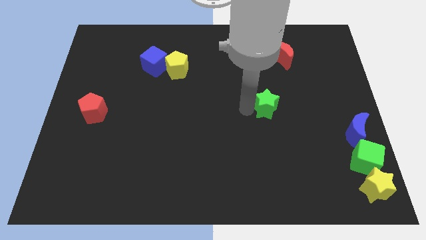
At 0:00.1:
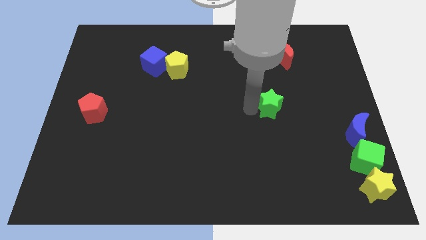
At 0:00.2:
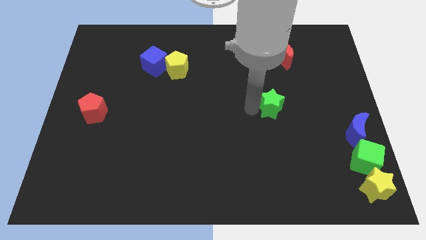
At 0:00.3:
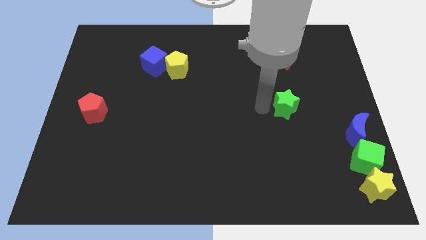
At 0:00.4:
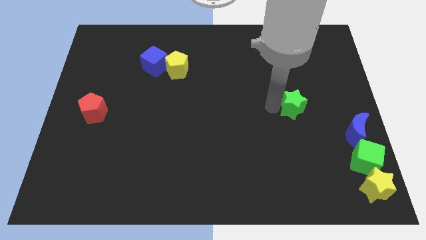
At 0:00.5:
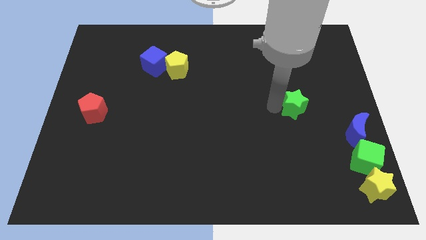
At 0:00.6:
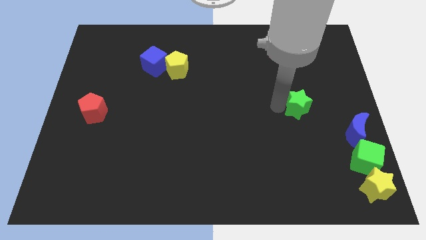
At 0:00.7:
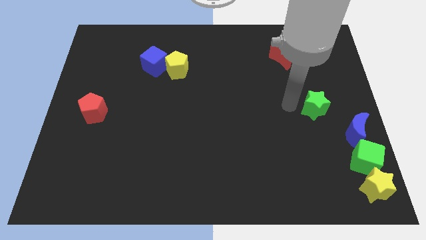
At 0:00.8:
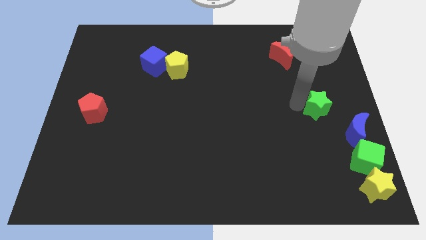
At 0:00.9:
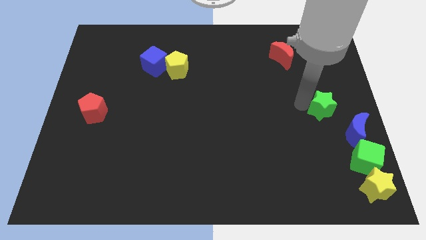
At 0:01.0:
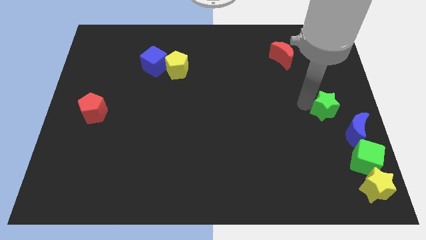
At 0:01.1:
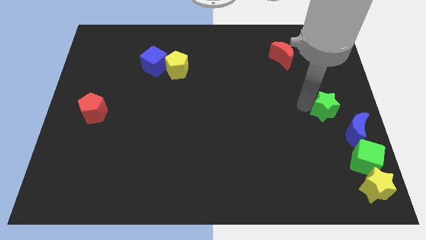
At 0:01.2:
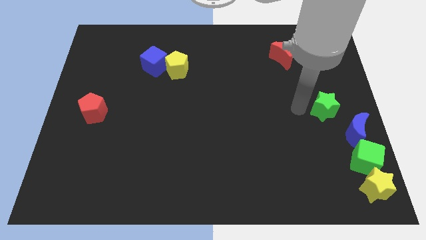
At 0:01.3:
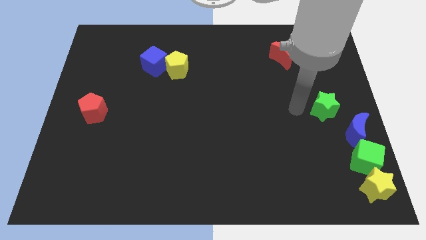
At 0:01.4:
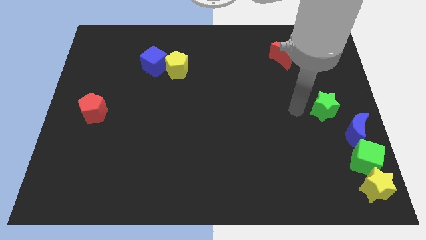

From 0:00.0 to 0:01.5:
move green star to the right

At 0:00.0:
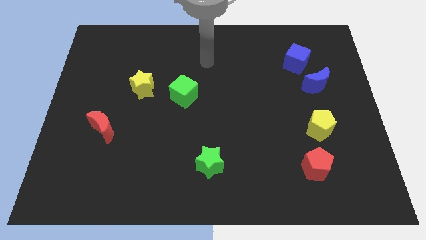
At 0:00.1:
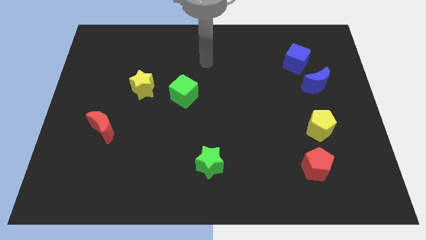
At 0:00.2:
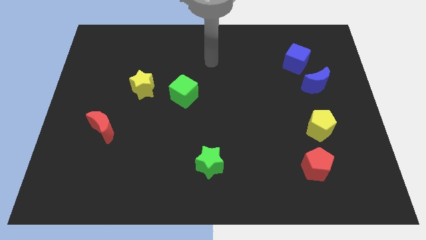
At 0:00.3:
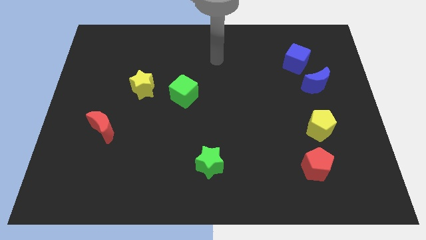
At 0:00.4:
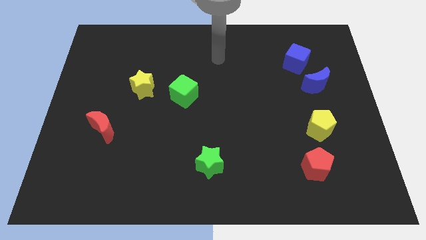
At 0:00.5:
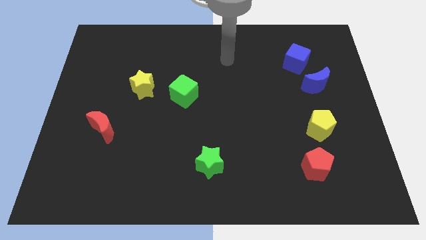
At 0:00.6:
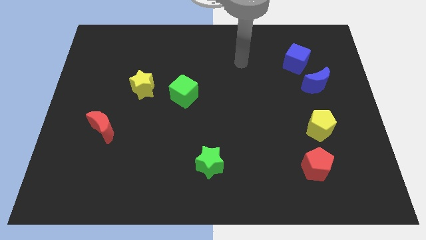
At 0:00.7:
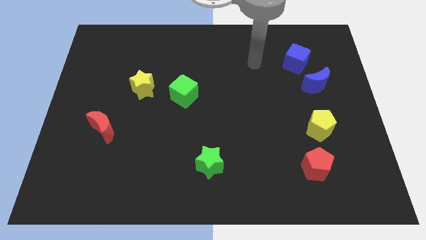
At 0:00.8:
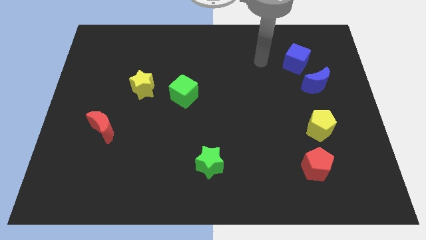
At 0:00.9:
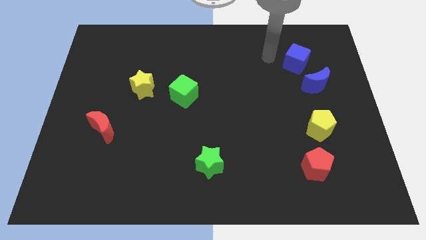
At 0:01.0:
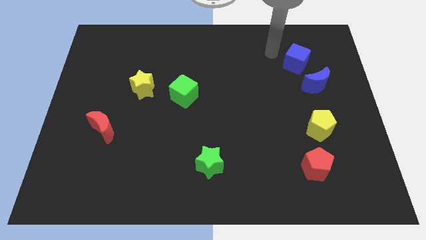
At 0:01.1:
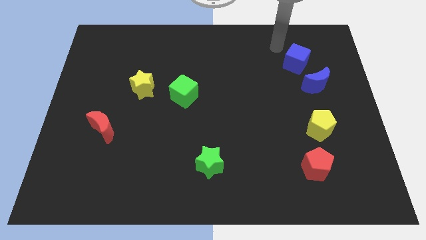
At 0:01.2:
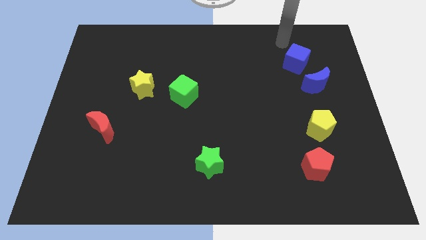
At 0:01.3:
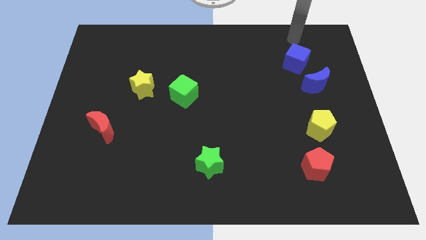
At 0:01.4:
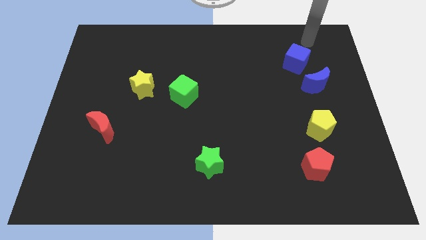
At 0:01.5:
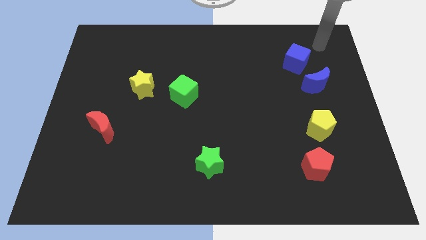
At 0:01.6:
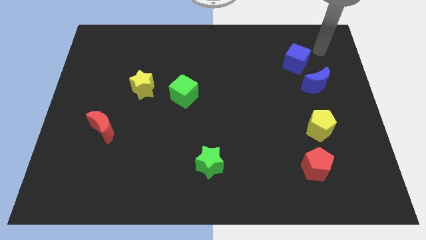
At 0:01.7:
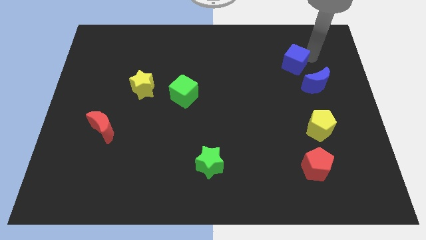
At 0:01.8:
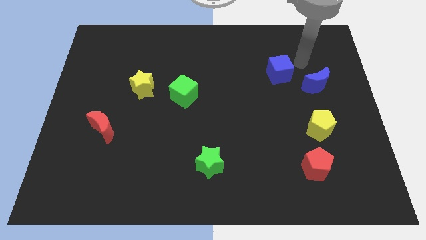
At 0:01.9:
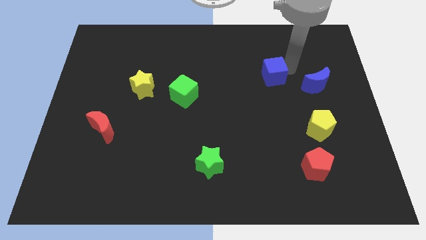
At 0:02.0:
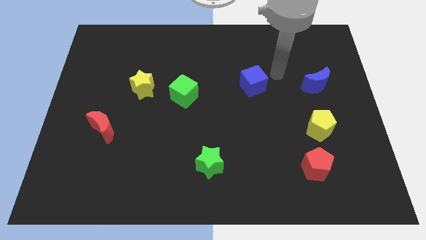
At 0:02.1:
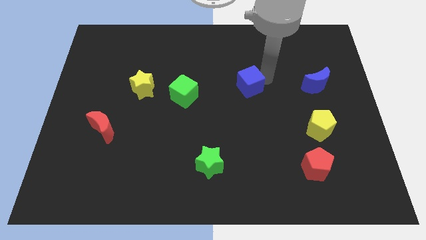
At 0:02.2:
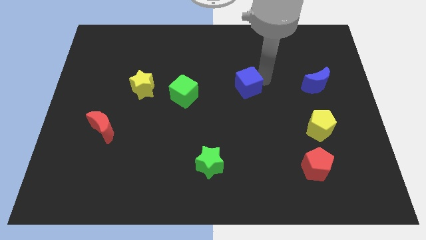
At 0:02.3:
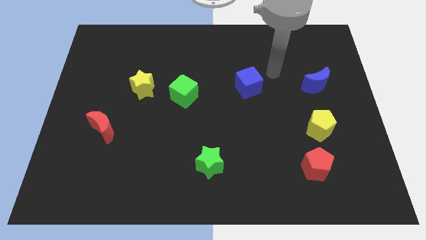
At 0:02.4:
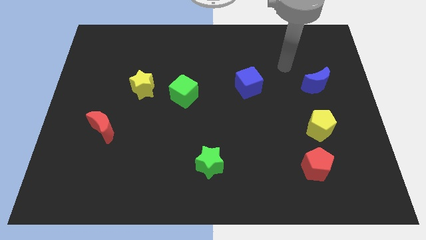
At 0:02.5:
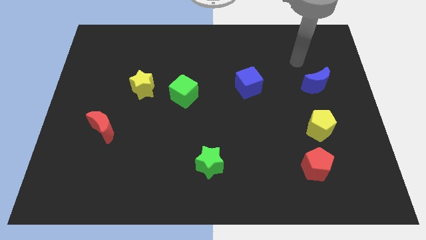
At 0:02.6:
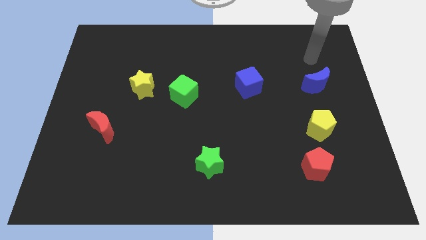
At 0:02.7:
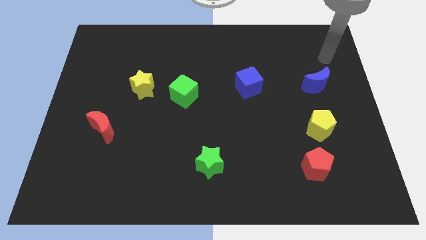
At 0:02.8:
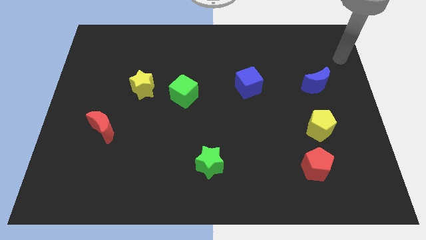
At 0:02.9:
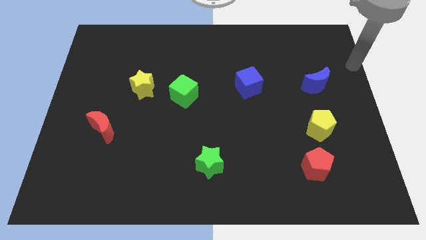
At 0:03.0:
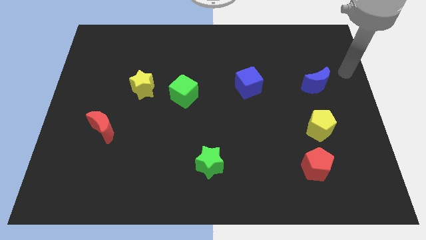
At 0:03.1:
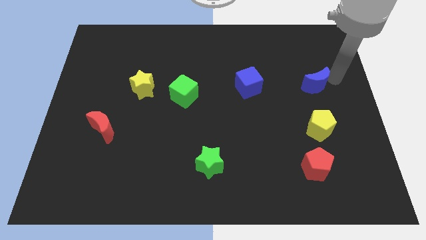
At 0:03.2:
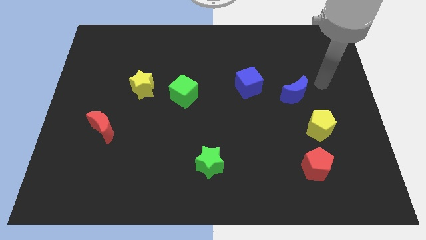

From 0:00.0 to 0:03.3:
separate the blue cube from the blue moon

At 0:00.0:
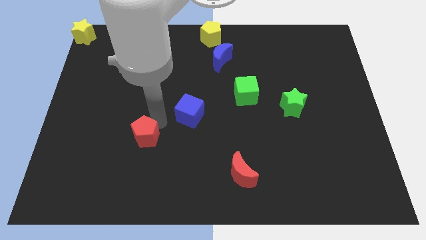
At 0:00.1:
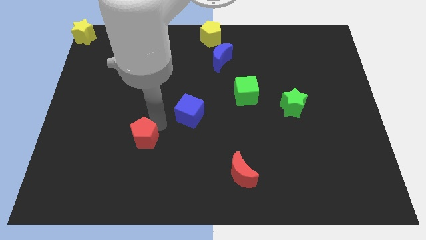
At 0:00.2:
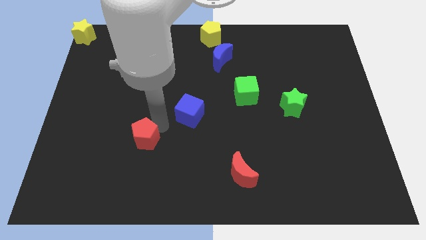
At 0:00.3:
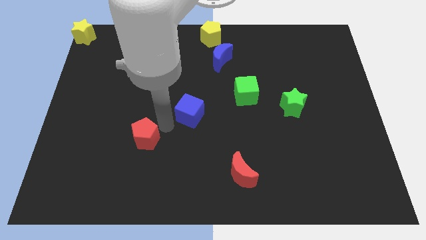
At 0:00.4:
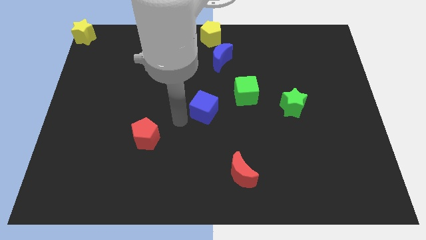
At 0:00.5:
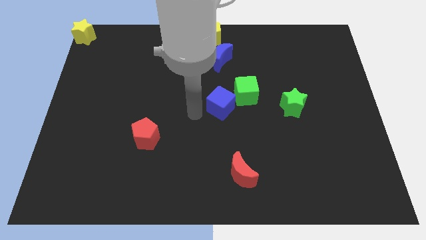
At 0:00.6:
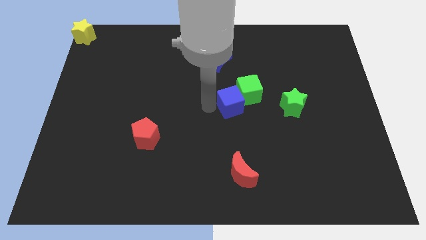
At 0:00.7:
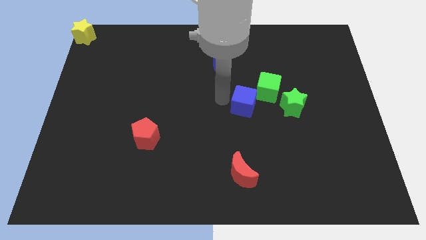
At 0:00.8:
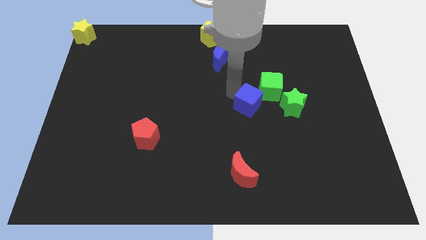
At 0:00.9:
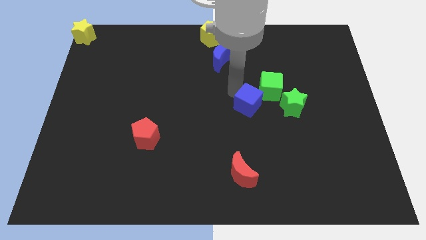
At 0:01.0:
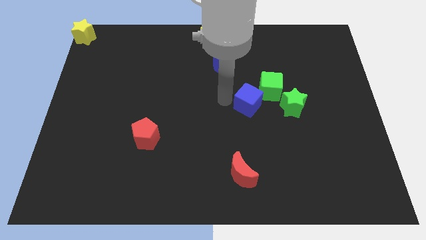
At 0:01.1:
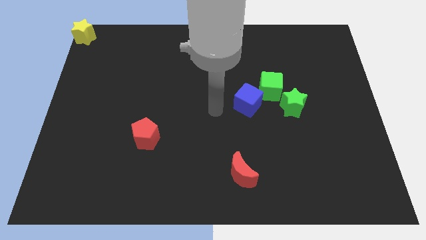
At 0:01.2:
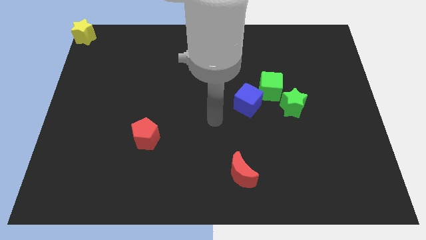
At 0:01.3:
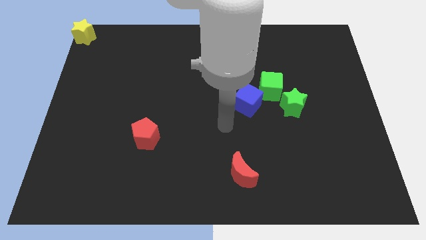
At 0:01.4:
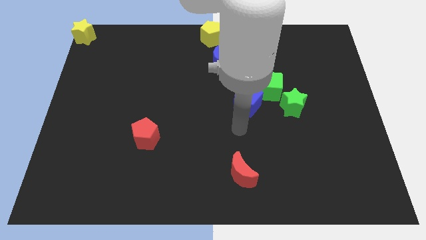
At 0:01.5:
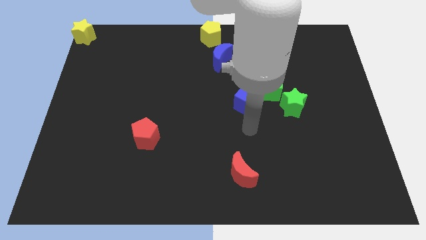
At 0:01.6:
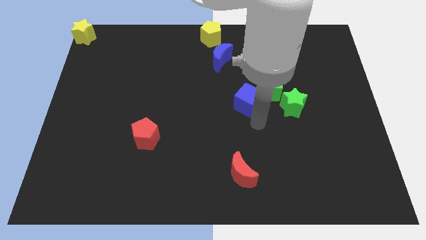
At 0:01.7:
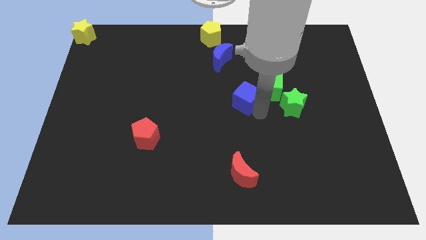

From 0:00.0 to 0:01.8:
push the blue cube into the green cube

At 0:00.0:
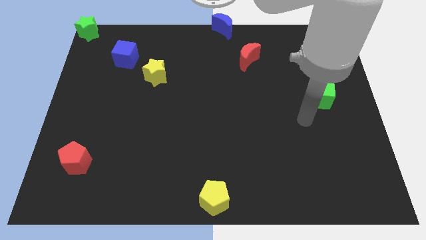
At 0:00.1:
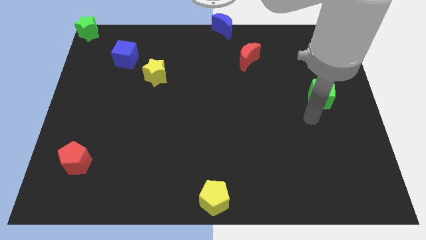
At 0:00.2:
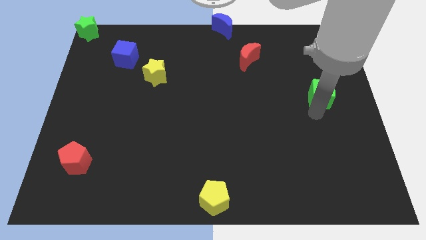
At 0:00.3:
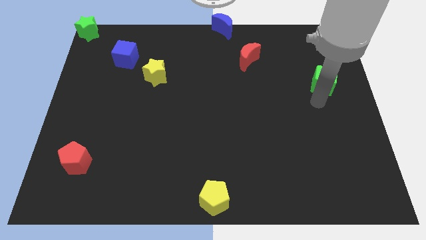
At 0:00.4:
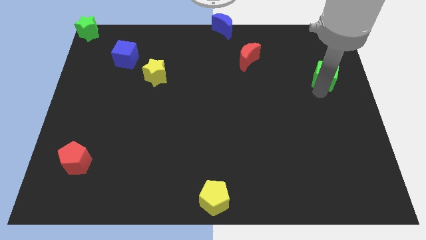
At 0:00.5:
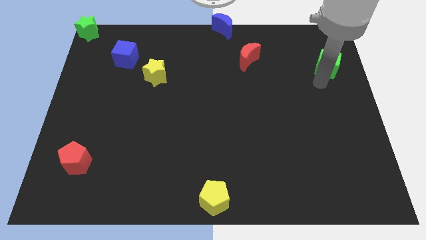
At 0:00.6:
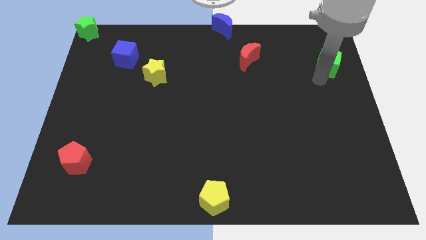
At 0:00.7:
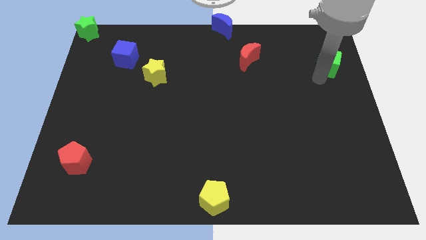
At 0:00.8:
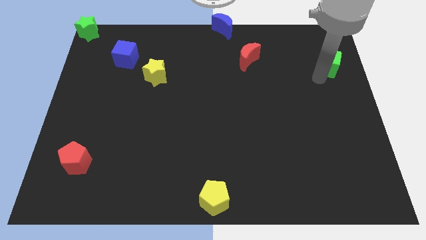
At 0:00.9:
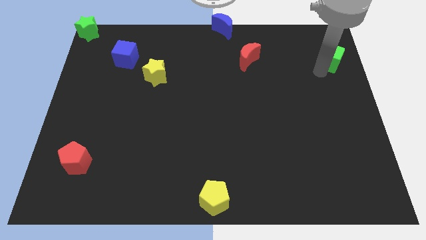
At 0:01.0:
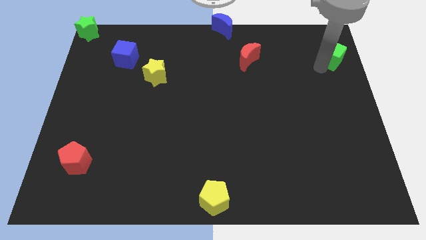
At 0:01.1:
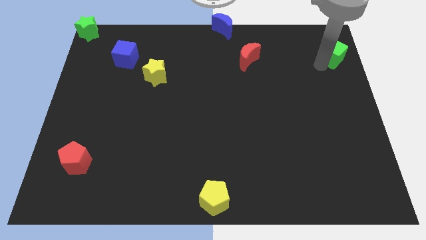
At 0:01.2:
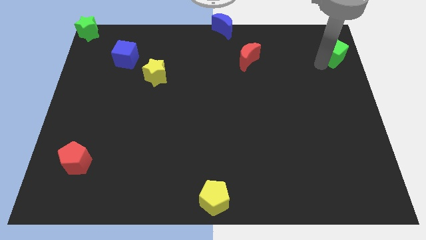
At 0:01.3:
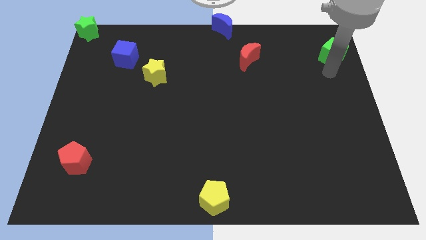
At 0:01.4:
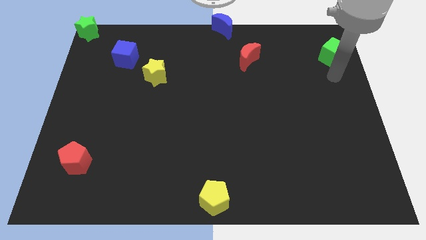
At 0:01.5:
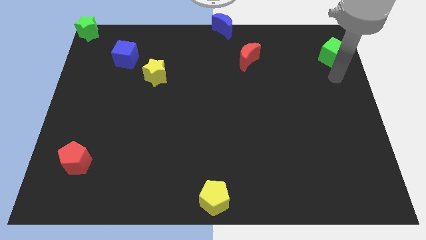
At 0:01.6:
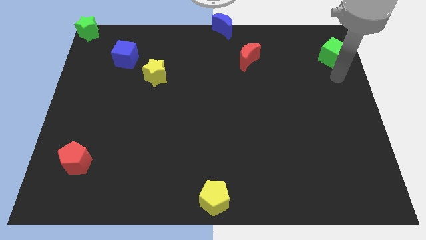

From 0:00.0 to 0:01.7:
move the green cube towards the top right side of the board a bit

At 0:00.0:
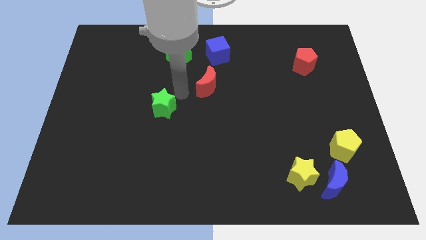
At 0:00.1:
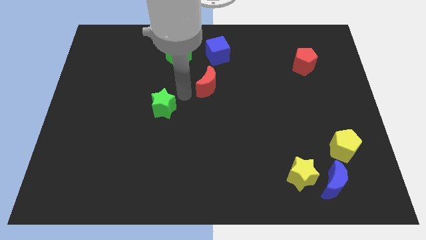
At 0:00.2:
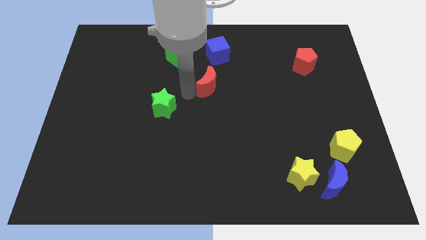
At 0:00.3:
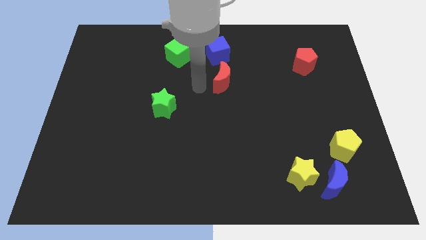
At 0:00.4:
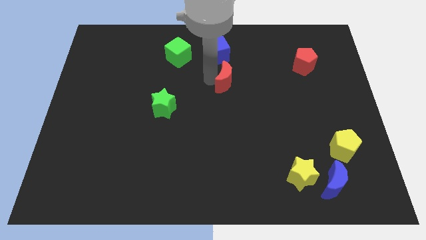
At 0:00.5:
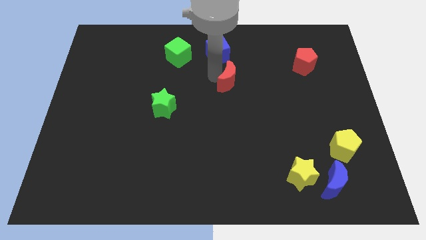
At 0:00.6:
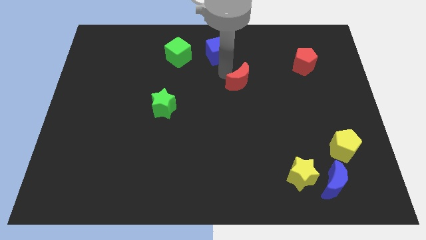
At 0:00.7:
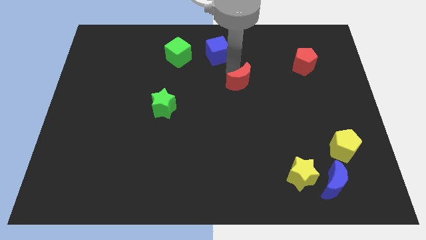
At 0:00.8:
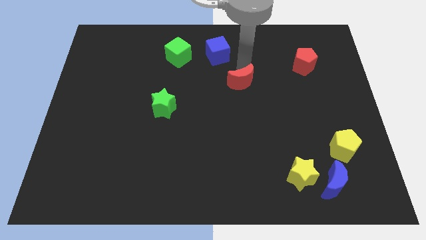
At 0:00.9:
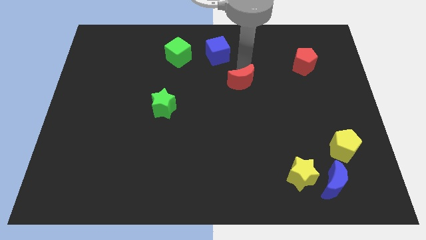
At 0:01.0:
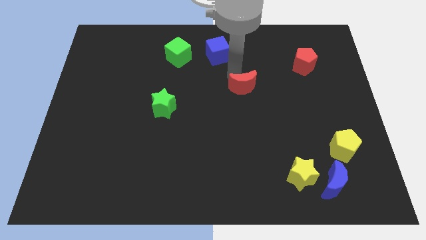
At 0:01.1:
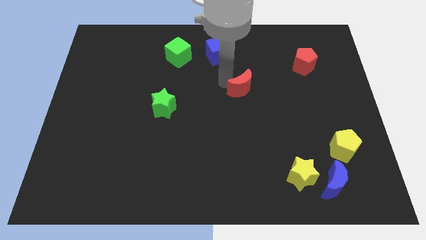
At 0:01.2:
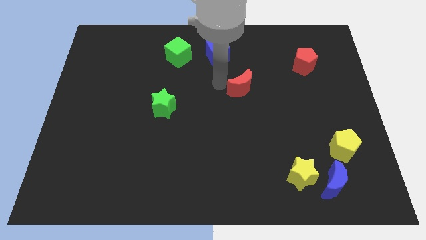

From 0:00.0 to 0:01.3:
put the red crescent diagonally in between the green star and the red pentagon
